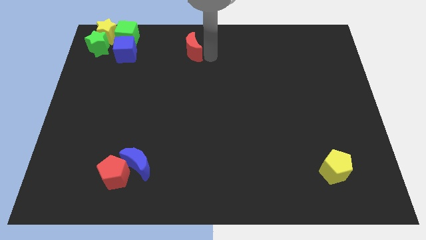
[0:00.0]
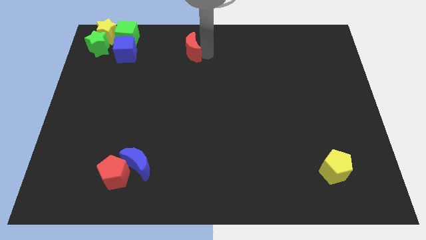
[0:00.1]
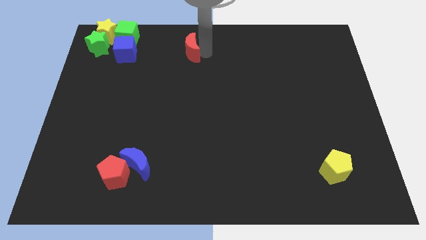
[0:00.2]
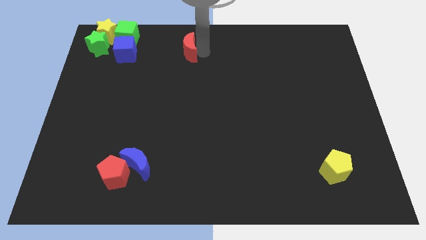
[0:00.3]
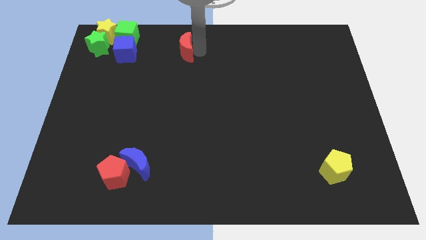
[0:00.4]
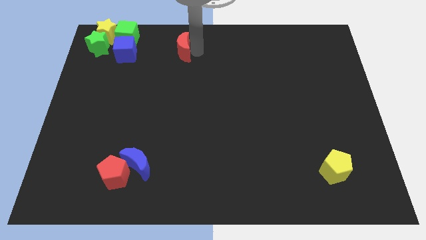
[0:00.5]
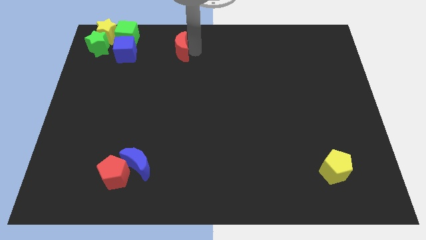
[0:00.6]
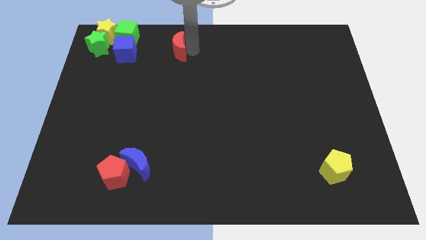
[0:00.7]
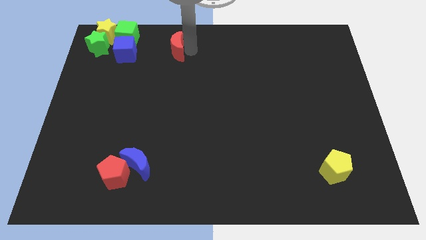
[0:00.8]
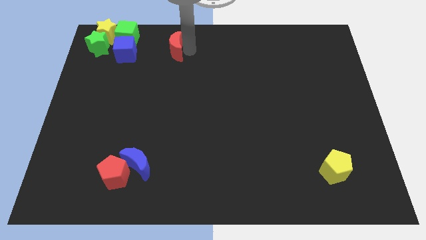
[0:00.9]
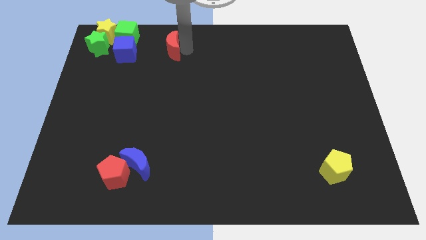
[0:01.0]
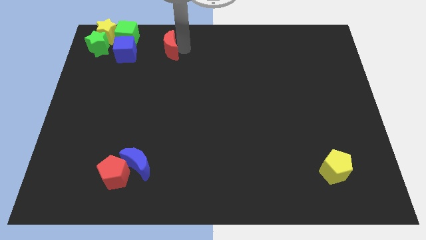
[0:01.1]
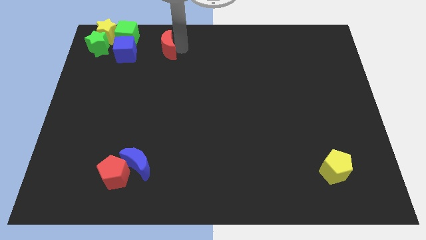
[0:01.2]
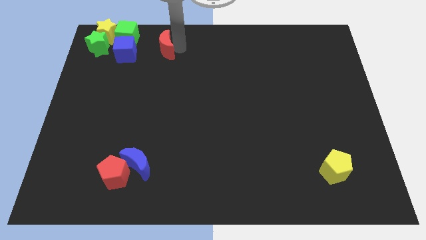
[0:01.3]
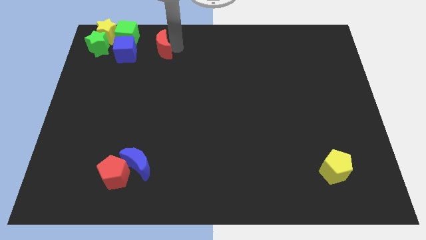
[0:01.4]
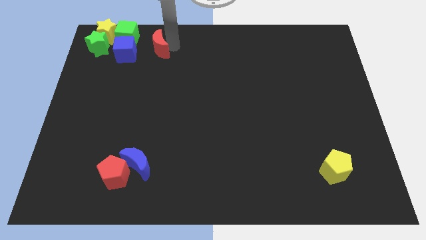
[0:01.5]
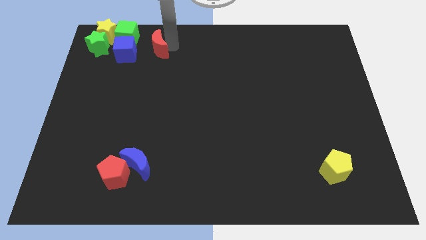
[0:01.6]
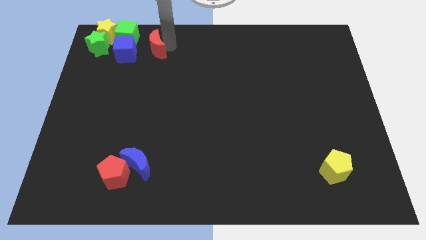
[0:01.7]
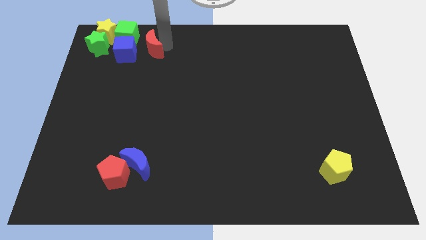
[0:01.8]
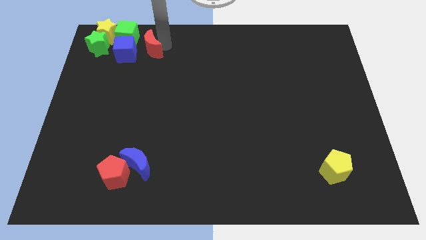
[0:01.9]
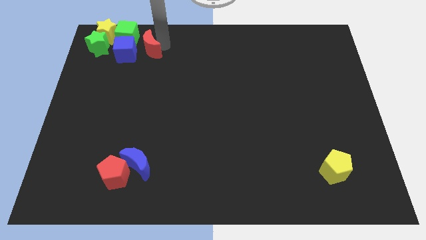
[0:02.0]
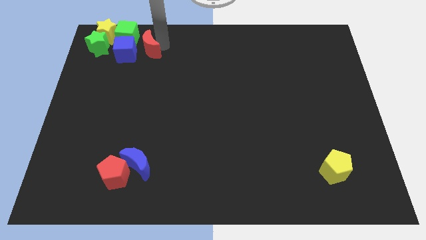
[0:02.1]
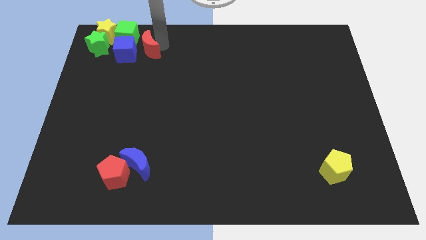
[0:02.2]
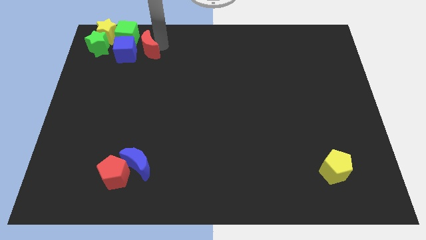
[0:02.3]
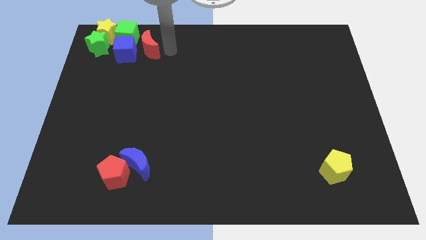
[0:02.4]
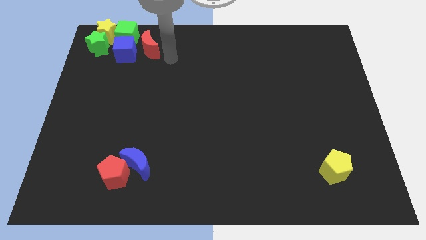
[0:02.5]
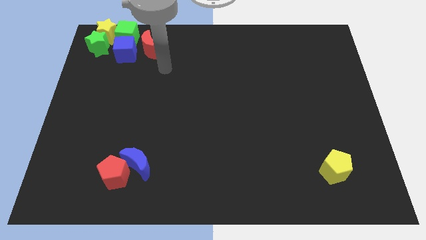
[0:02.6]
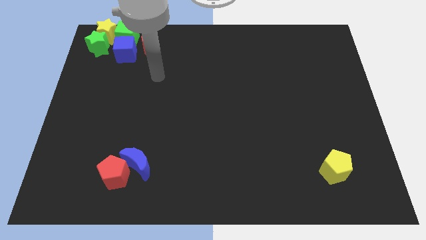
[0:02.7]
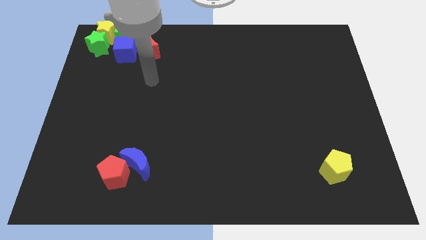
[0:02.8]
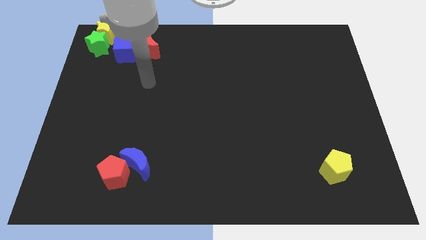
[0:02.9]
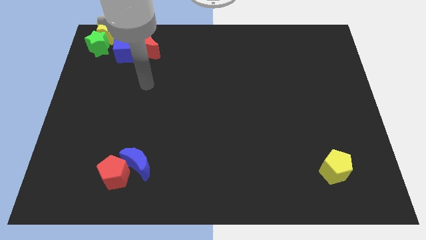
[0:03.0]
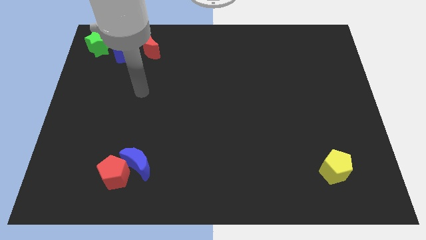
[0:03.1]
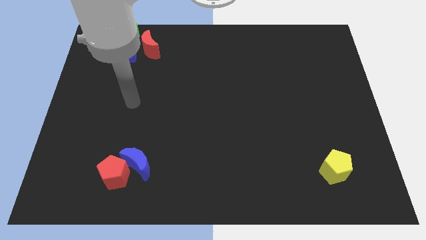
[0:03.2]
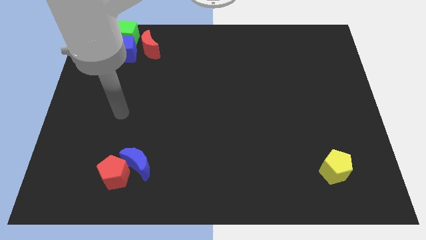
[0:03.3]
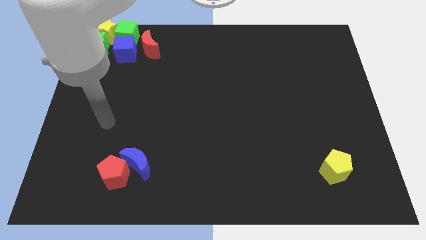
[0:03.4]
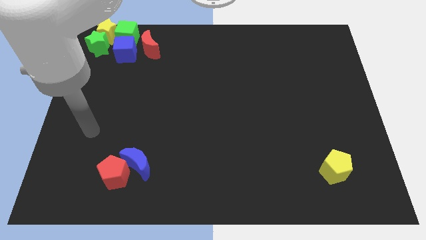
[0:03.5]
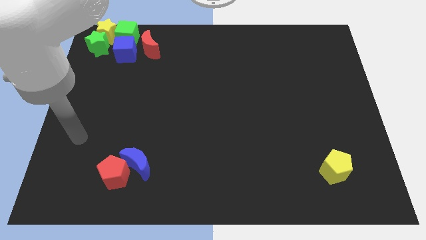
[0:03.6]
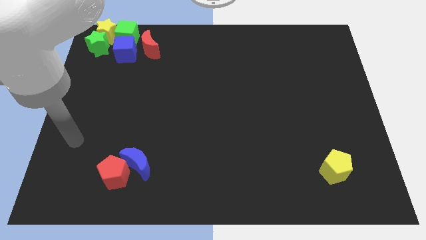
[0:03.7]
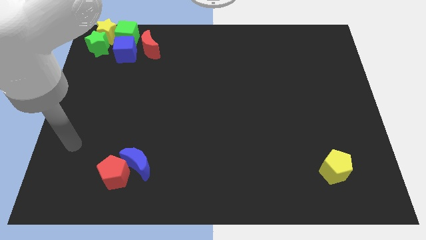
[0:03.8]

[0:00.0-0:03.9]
push the red crescent to the right of the blue cube

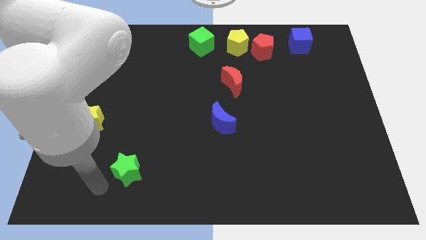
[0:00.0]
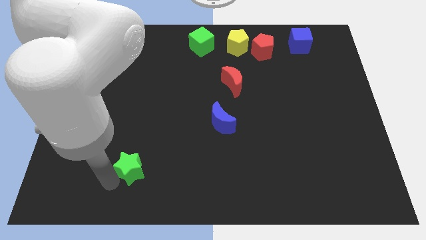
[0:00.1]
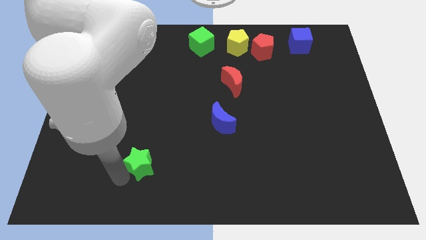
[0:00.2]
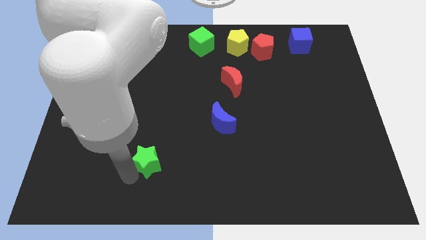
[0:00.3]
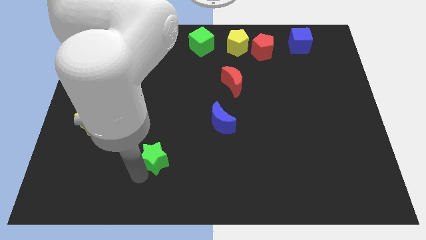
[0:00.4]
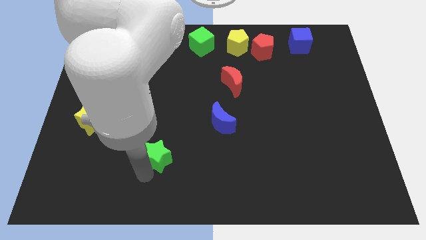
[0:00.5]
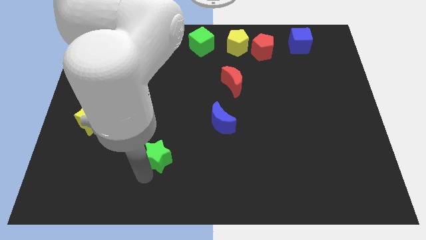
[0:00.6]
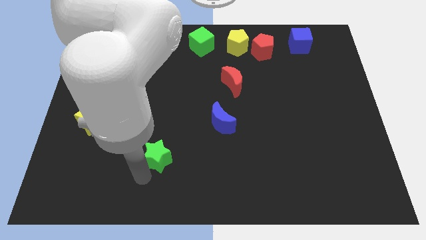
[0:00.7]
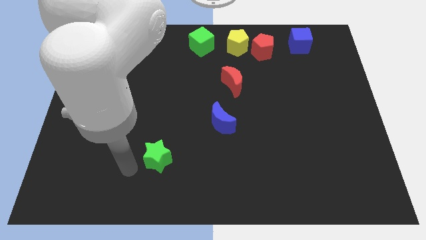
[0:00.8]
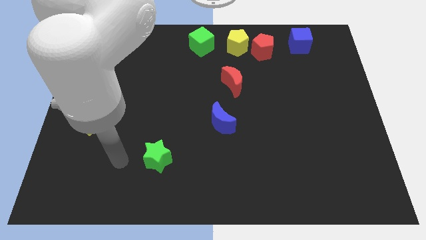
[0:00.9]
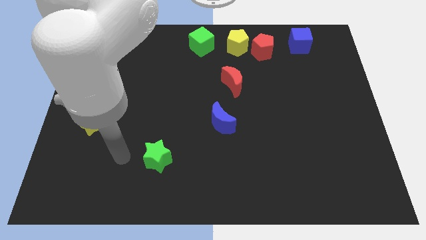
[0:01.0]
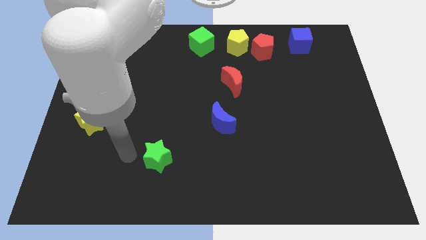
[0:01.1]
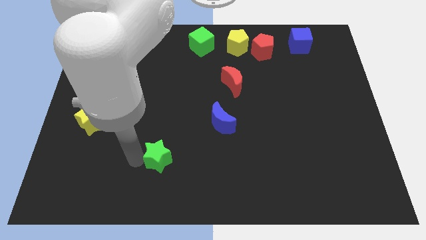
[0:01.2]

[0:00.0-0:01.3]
move the green star towards the center of the board

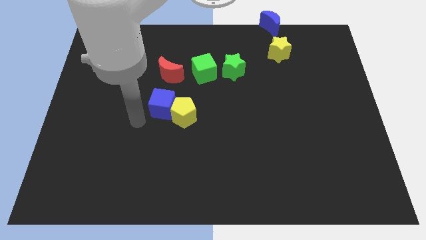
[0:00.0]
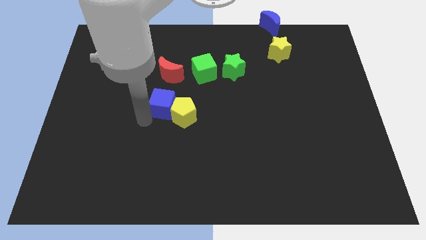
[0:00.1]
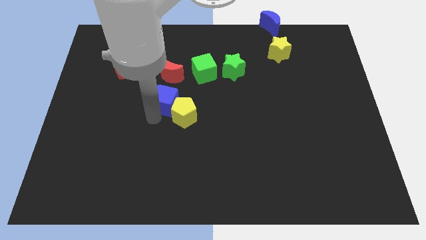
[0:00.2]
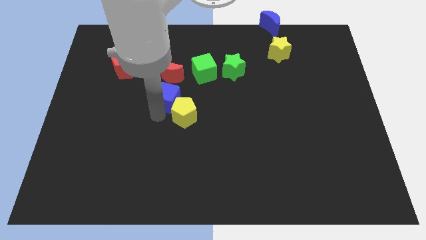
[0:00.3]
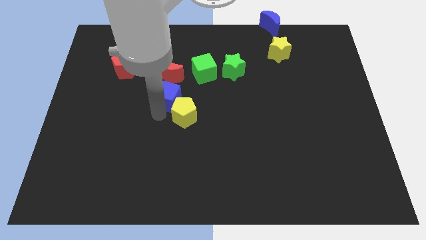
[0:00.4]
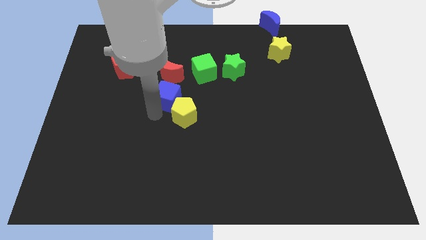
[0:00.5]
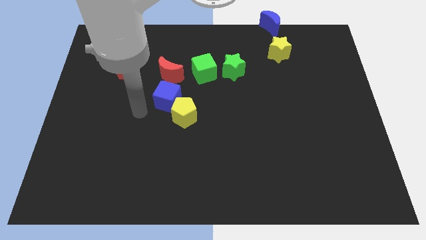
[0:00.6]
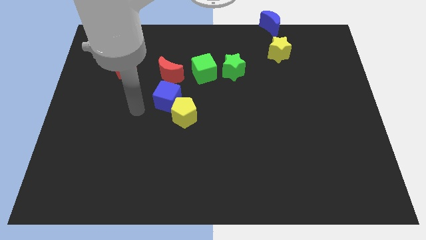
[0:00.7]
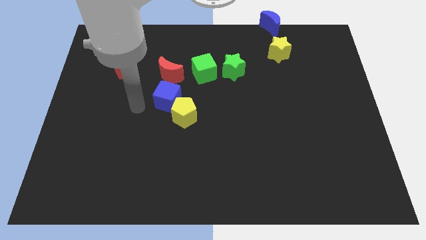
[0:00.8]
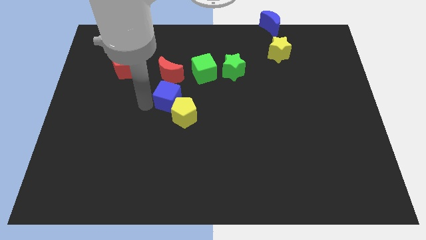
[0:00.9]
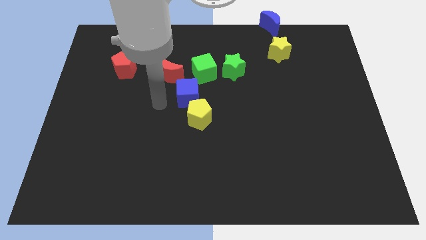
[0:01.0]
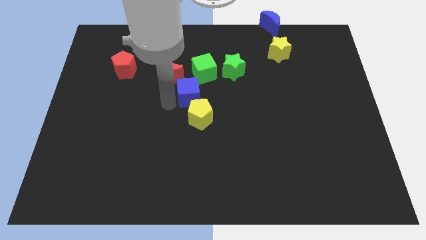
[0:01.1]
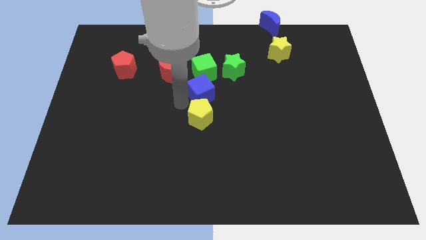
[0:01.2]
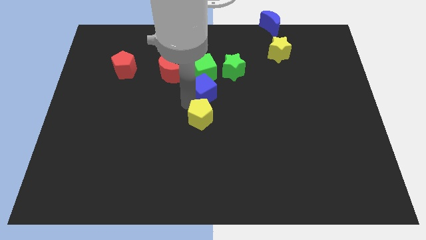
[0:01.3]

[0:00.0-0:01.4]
put the blue cube below the green cube

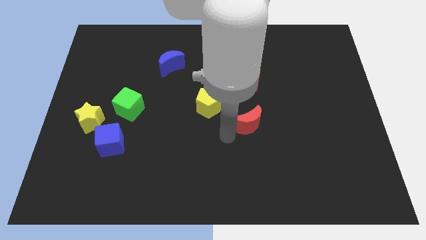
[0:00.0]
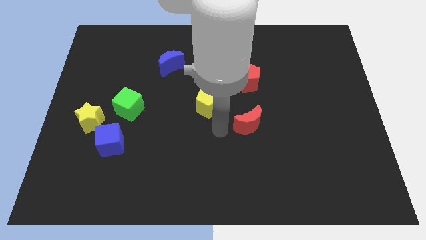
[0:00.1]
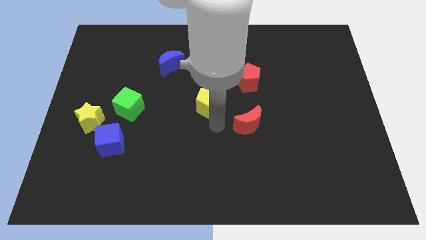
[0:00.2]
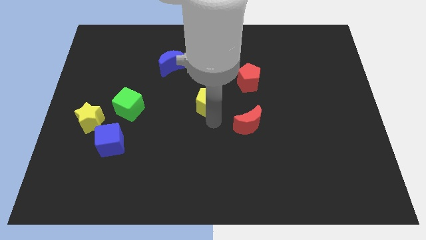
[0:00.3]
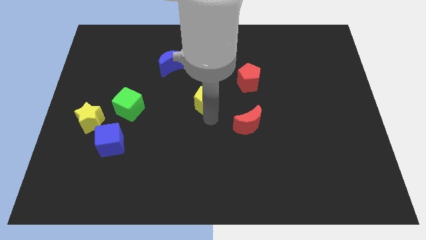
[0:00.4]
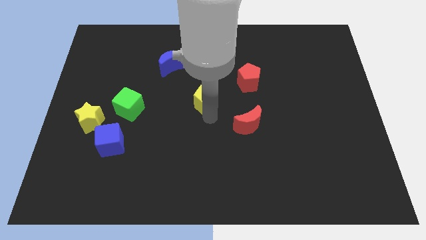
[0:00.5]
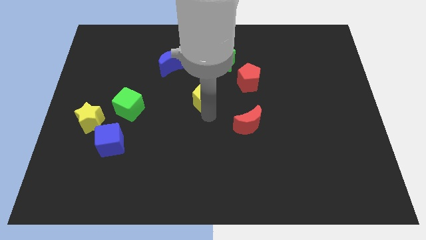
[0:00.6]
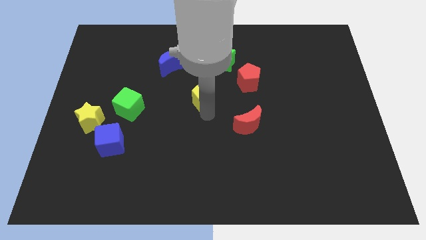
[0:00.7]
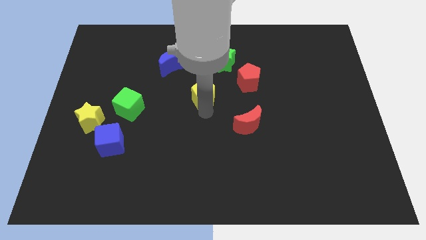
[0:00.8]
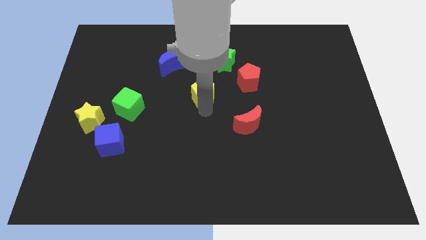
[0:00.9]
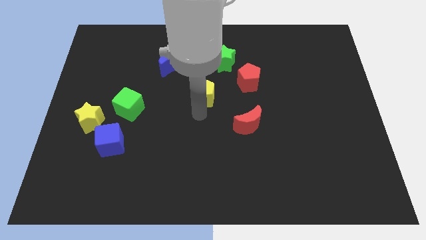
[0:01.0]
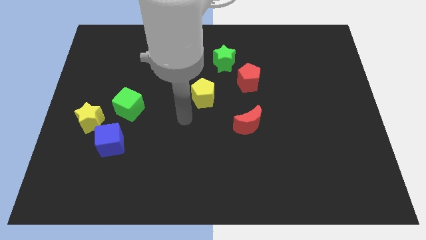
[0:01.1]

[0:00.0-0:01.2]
move the yellow pentagon left below the green star

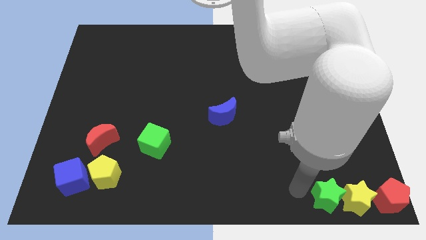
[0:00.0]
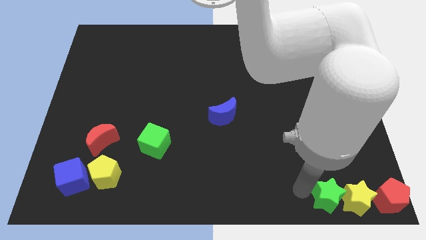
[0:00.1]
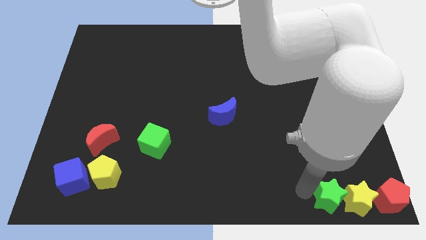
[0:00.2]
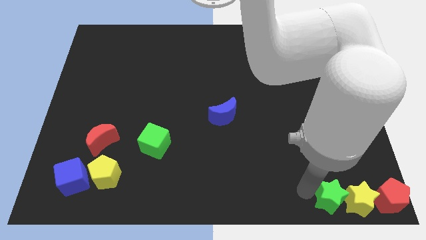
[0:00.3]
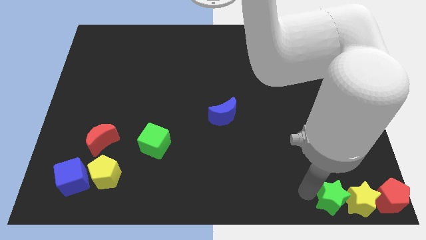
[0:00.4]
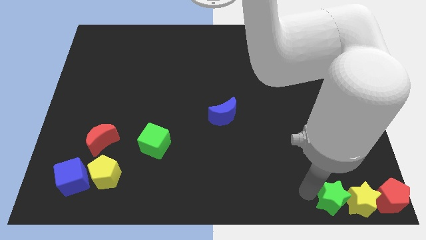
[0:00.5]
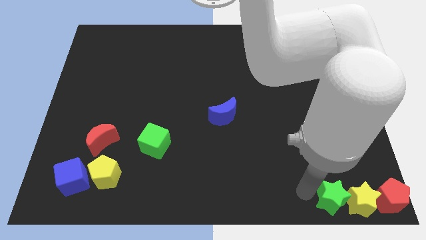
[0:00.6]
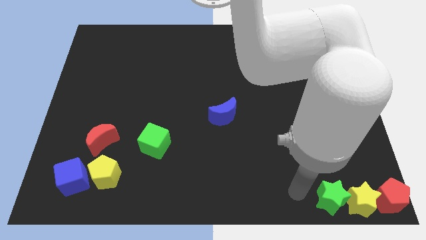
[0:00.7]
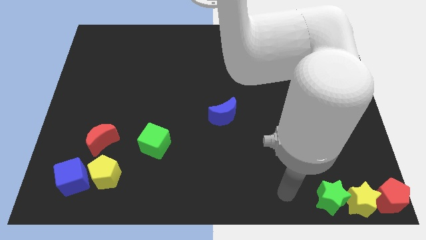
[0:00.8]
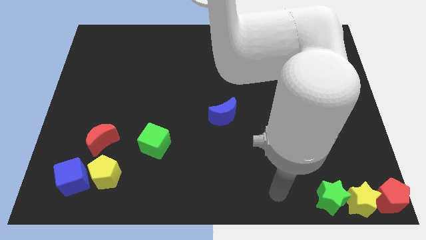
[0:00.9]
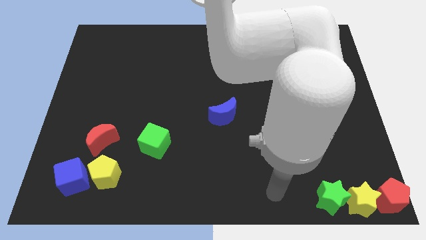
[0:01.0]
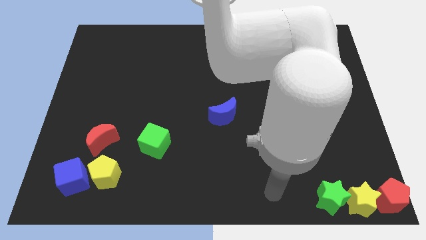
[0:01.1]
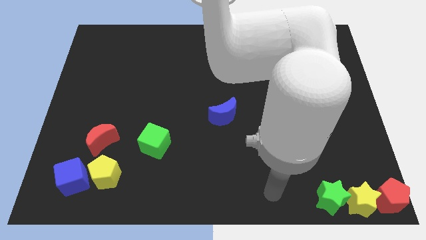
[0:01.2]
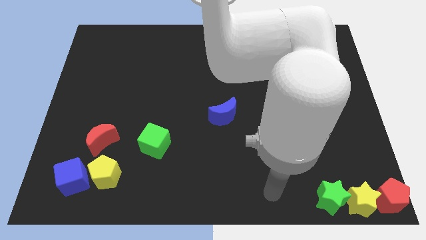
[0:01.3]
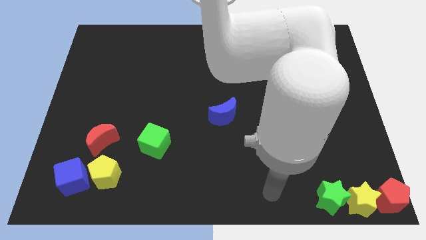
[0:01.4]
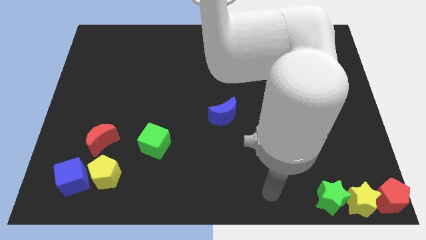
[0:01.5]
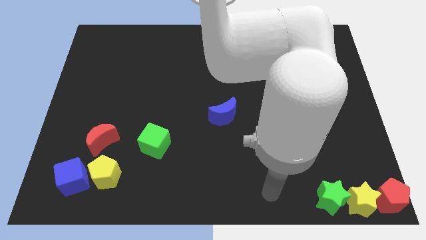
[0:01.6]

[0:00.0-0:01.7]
place the yellow star and the green star to the left of the red pentagon
